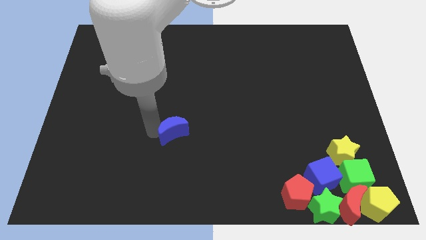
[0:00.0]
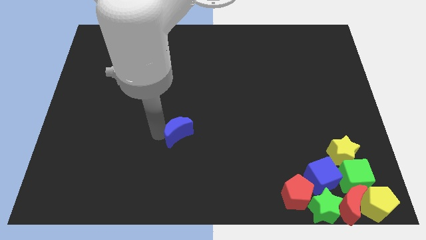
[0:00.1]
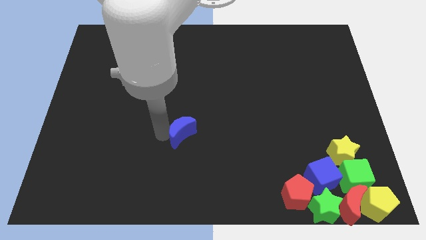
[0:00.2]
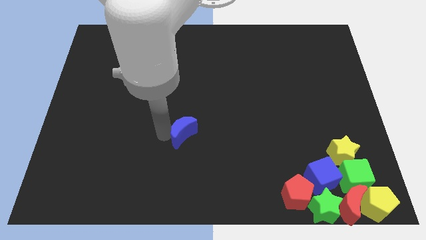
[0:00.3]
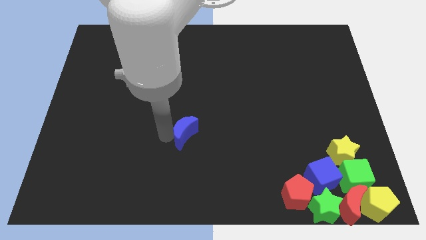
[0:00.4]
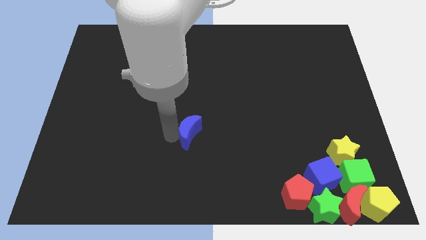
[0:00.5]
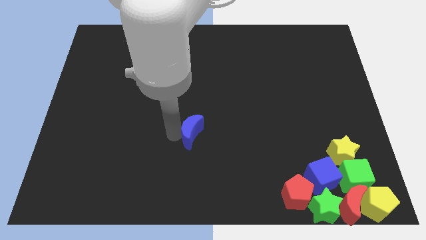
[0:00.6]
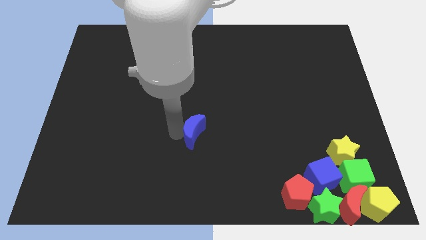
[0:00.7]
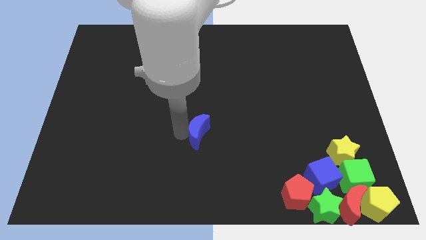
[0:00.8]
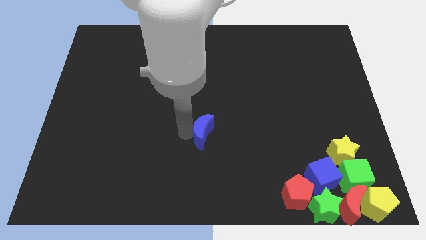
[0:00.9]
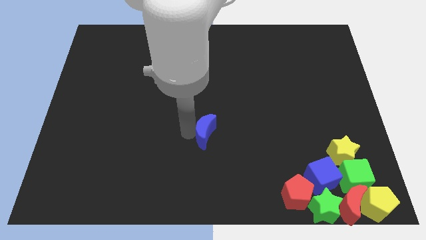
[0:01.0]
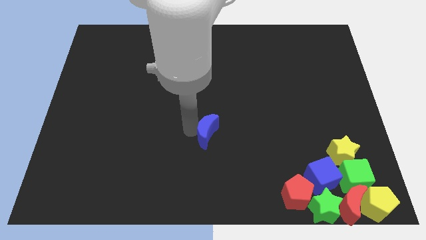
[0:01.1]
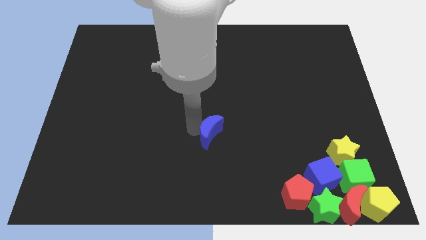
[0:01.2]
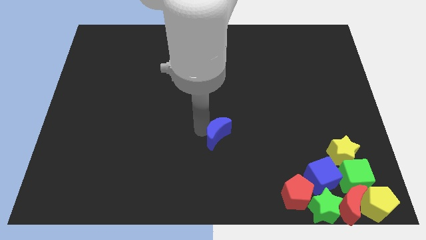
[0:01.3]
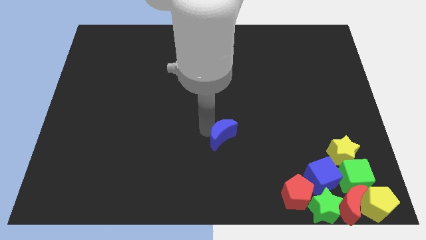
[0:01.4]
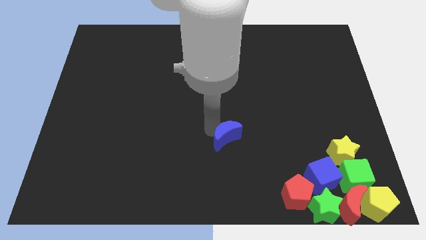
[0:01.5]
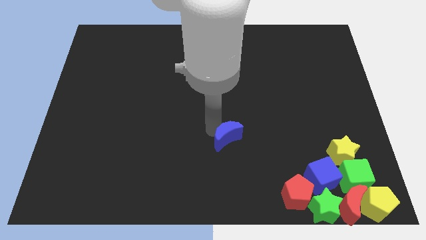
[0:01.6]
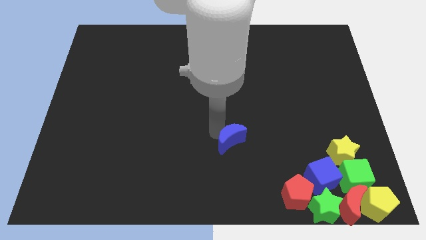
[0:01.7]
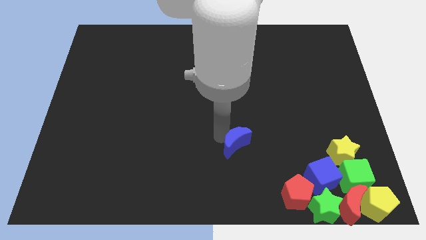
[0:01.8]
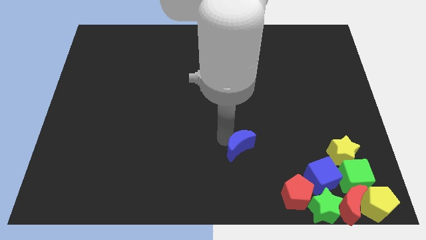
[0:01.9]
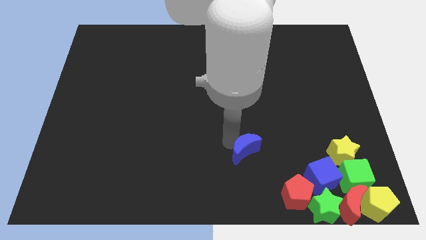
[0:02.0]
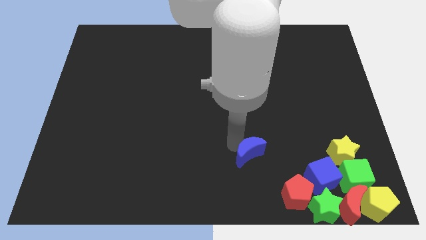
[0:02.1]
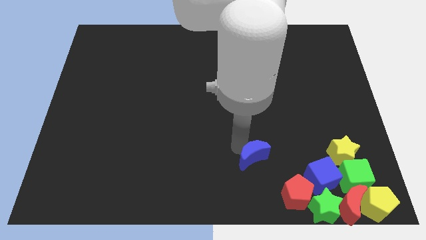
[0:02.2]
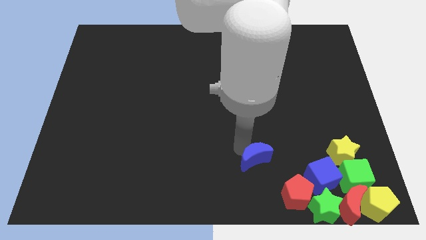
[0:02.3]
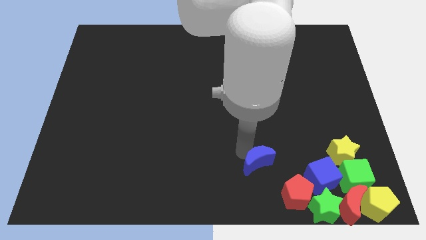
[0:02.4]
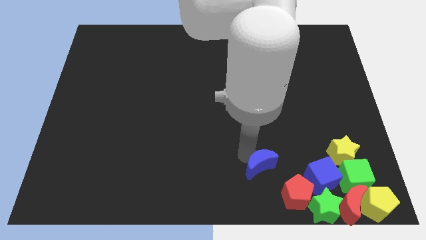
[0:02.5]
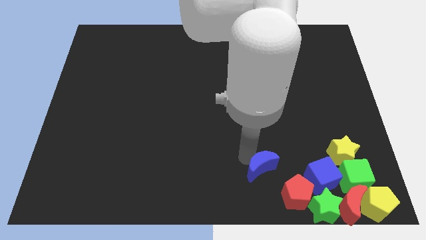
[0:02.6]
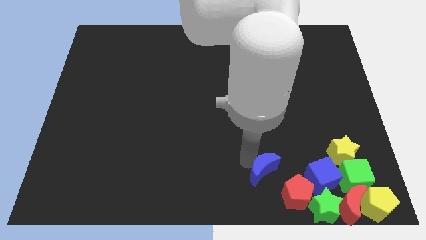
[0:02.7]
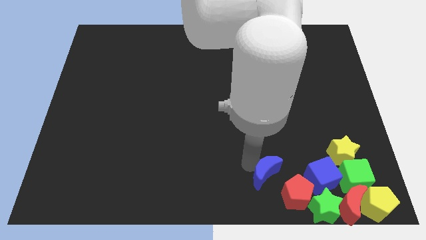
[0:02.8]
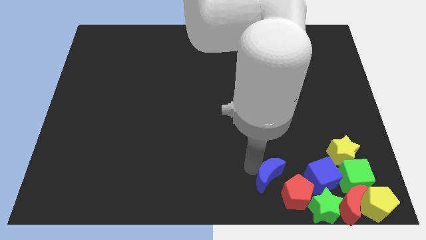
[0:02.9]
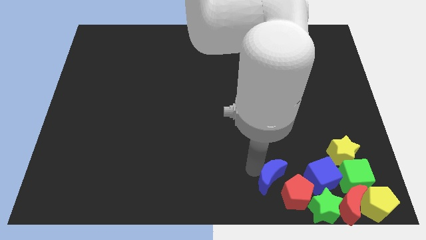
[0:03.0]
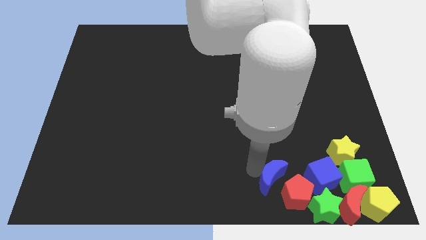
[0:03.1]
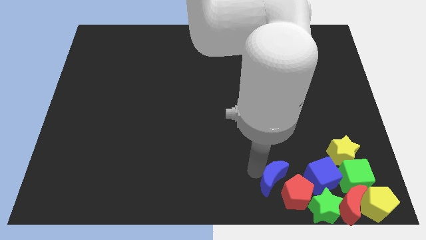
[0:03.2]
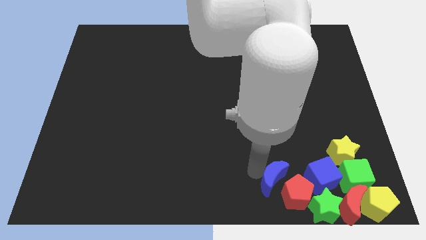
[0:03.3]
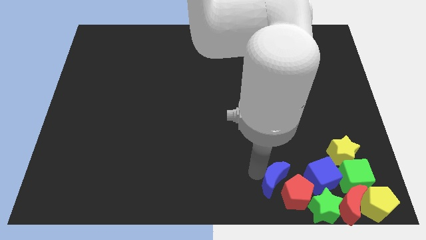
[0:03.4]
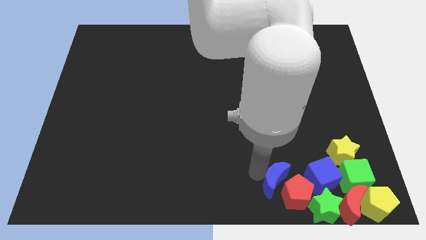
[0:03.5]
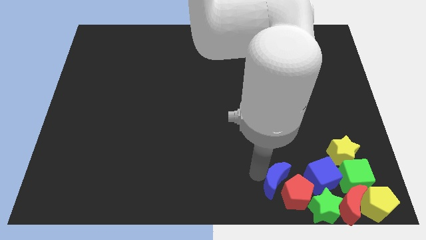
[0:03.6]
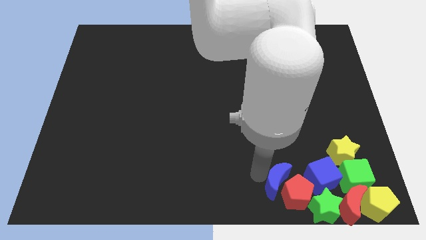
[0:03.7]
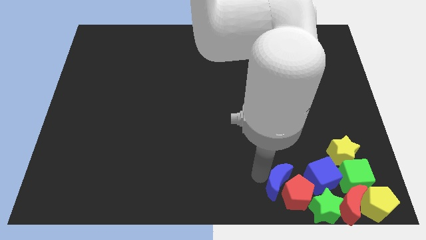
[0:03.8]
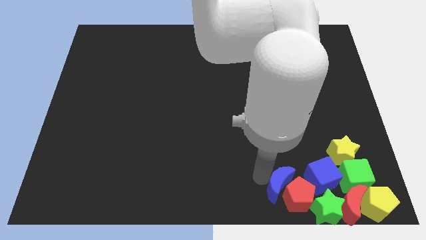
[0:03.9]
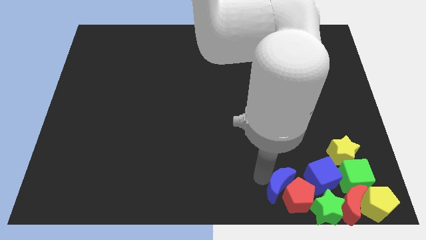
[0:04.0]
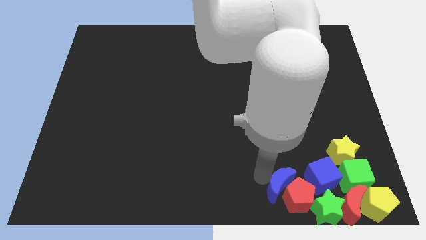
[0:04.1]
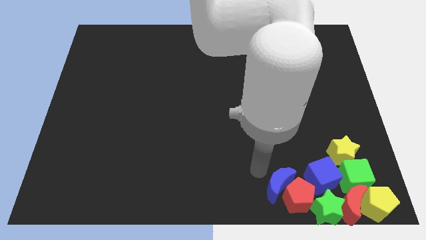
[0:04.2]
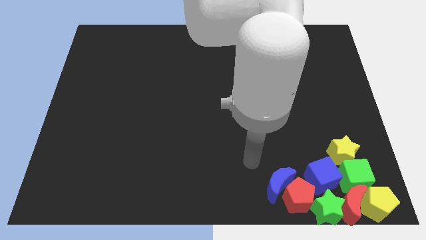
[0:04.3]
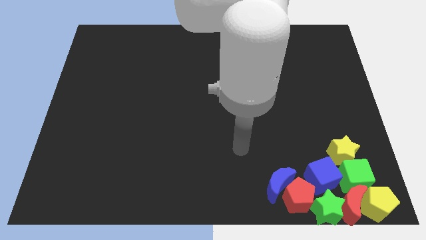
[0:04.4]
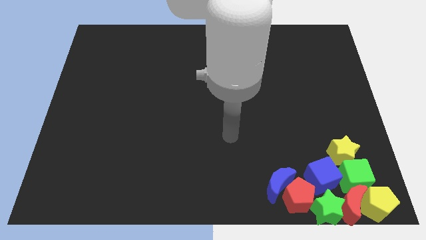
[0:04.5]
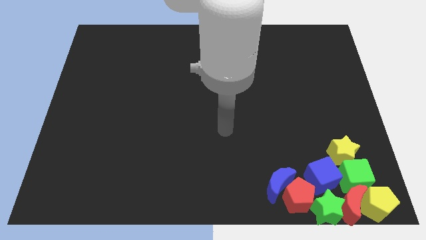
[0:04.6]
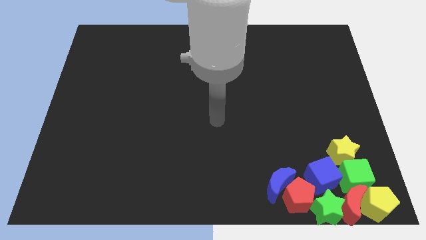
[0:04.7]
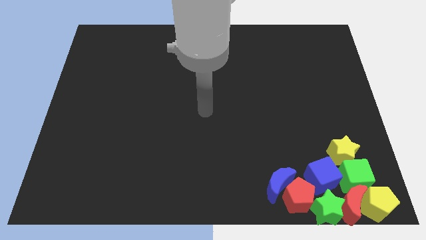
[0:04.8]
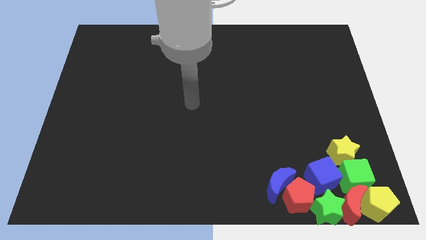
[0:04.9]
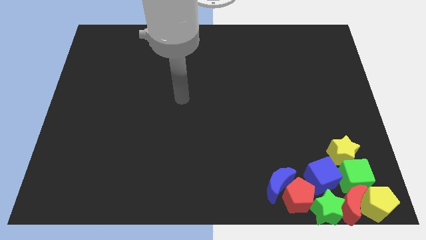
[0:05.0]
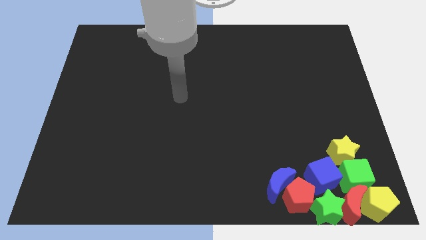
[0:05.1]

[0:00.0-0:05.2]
move the blue crescent into the red pentagon

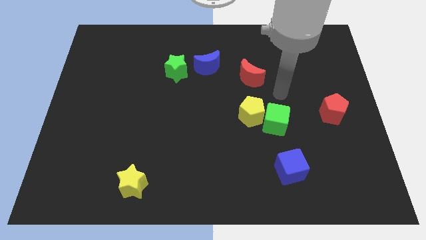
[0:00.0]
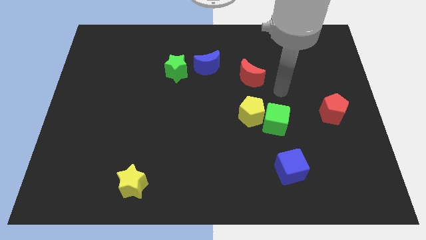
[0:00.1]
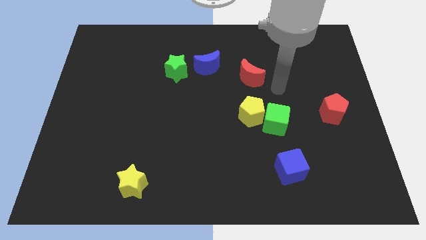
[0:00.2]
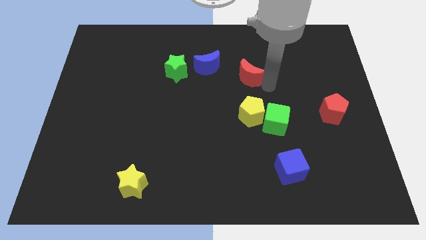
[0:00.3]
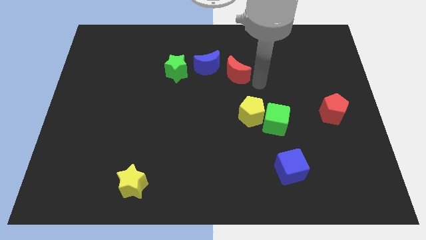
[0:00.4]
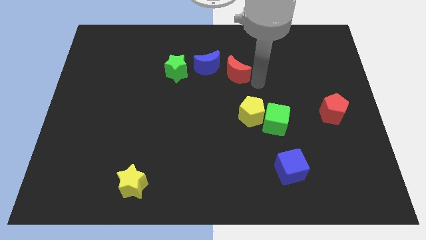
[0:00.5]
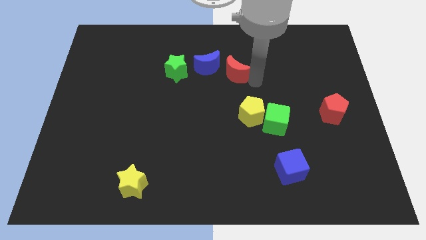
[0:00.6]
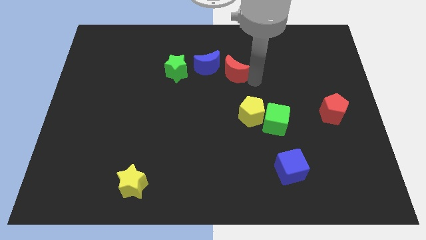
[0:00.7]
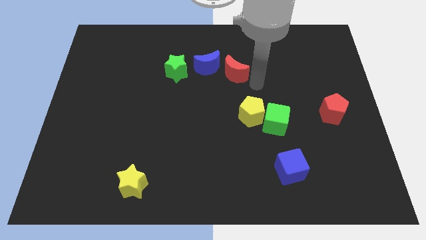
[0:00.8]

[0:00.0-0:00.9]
place the red moon to the right of the blue moon

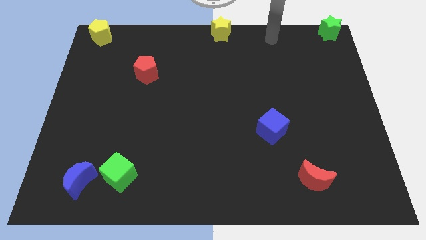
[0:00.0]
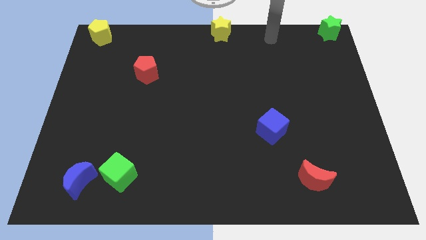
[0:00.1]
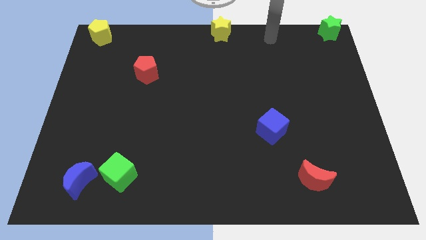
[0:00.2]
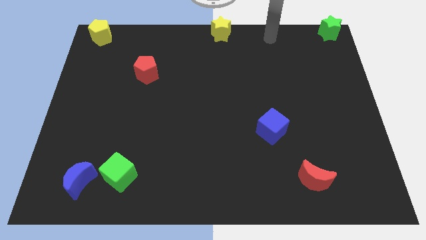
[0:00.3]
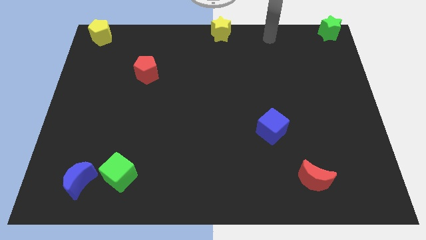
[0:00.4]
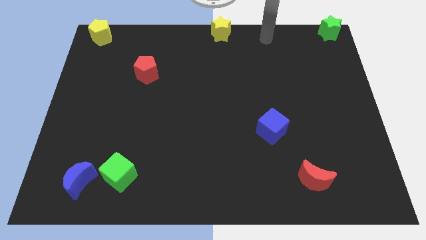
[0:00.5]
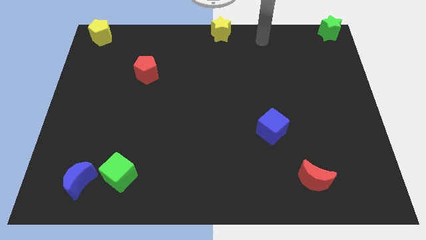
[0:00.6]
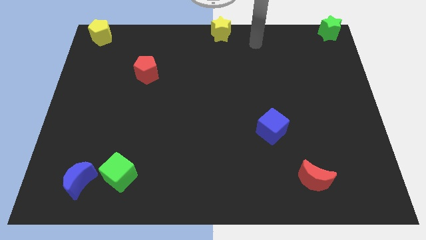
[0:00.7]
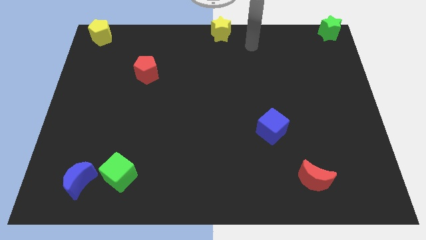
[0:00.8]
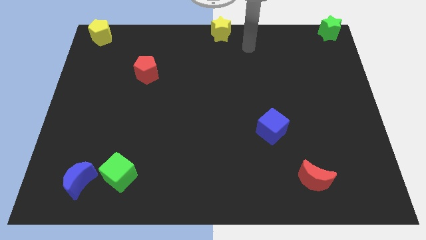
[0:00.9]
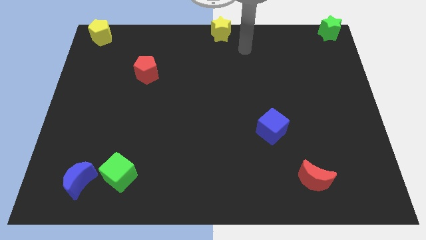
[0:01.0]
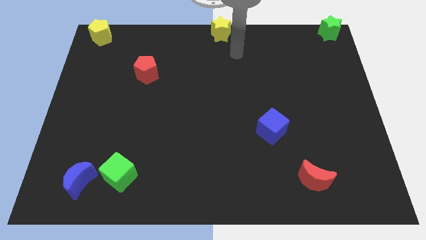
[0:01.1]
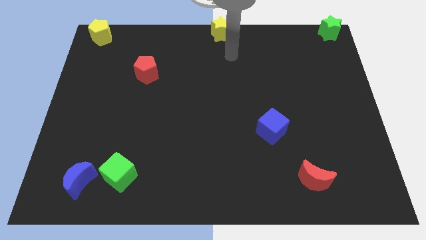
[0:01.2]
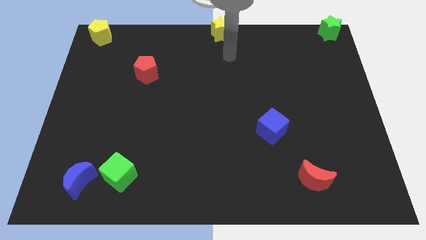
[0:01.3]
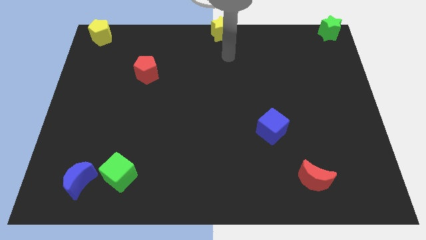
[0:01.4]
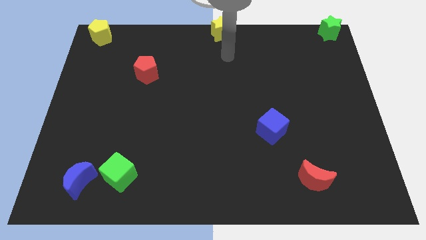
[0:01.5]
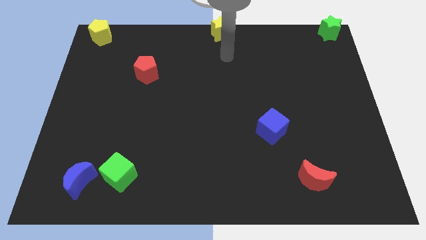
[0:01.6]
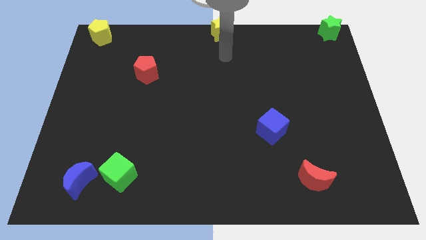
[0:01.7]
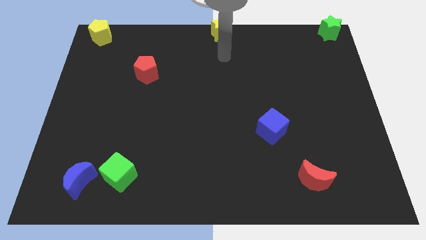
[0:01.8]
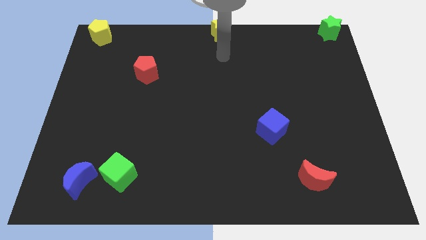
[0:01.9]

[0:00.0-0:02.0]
place the arm under the yellow star

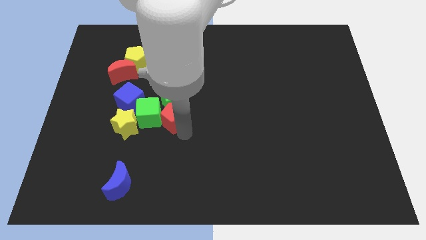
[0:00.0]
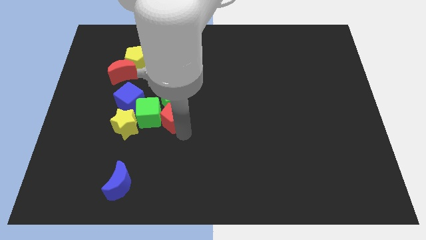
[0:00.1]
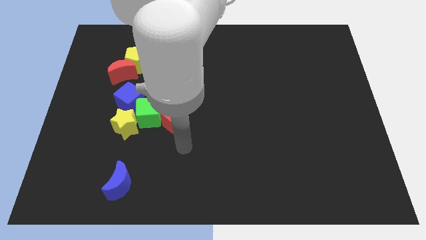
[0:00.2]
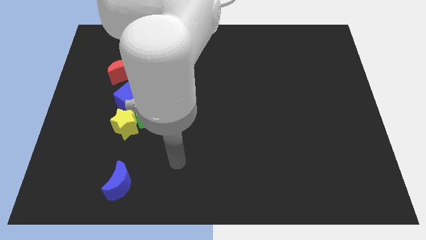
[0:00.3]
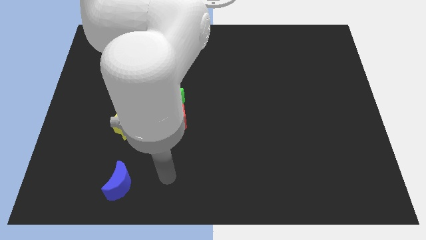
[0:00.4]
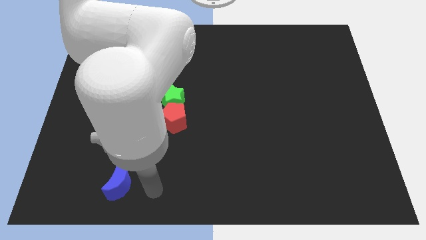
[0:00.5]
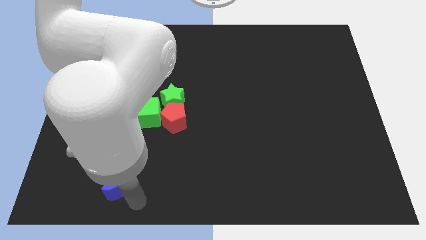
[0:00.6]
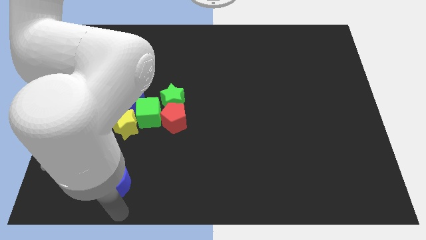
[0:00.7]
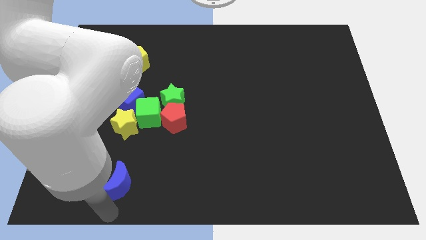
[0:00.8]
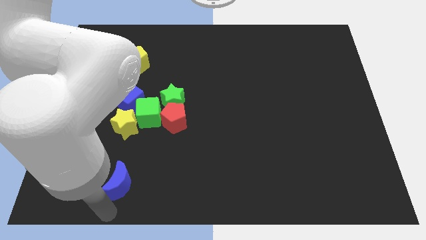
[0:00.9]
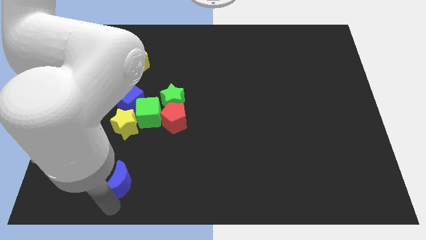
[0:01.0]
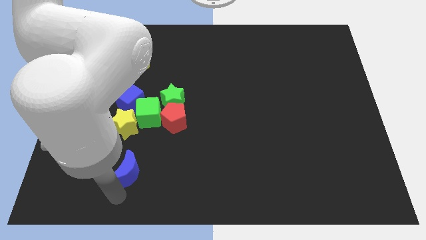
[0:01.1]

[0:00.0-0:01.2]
place your arm at the bottom of the blue crescent
